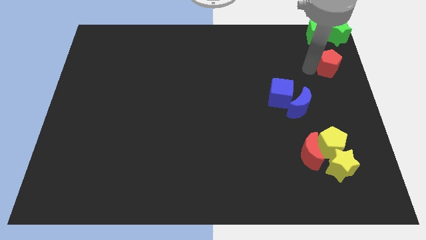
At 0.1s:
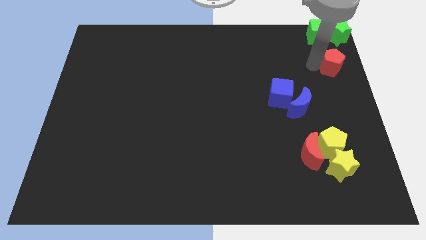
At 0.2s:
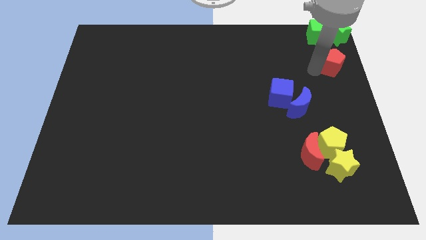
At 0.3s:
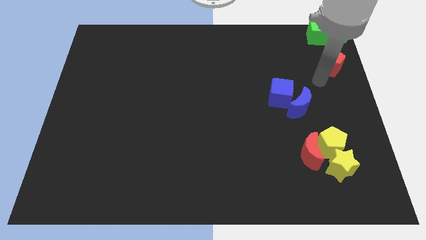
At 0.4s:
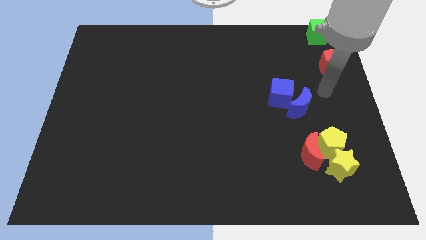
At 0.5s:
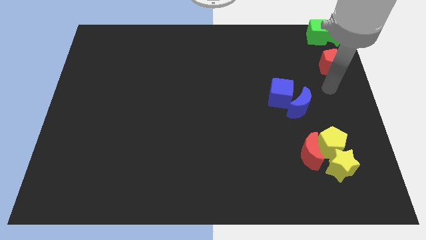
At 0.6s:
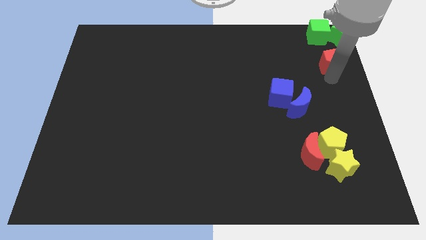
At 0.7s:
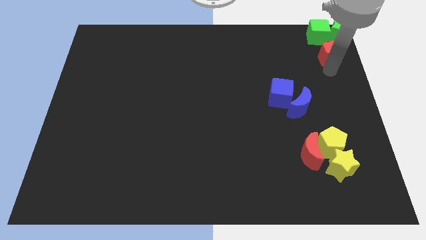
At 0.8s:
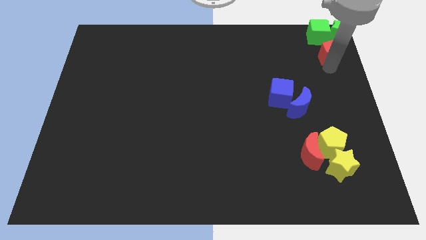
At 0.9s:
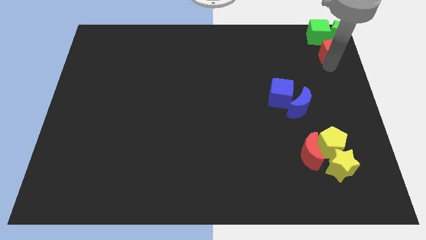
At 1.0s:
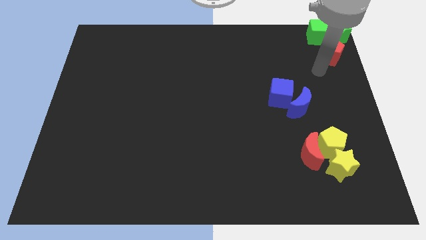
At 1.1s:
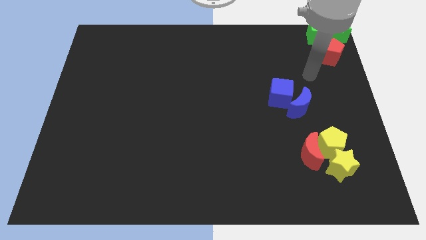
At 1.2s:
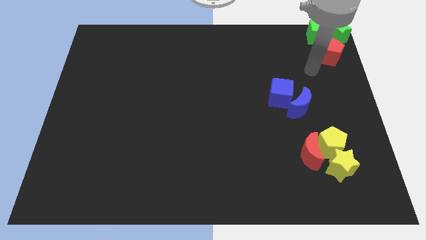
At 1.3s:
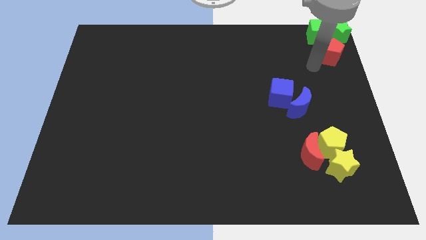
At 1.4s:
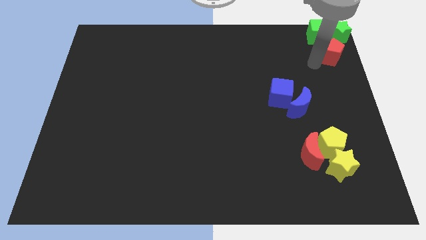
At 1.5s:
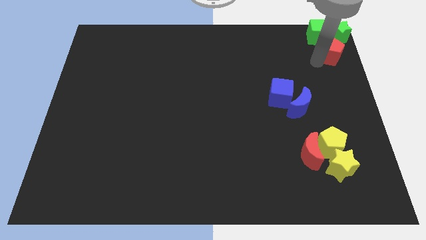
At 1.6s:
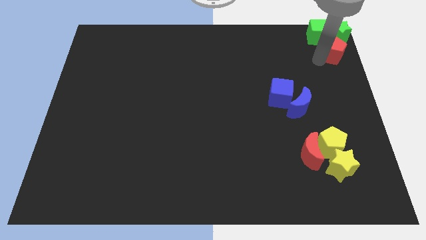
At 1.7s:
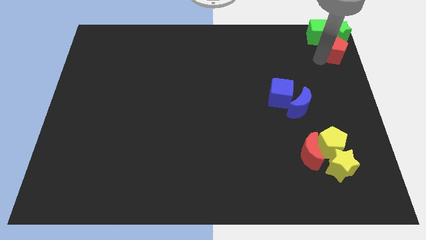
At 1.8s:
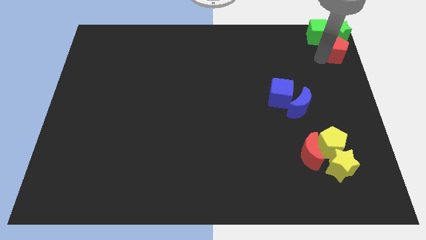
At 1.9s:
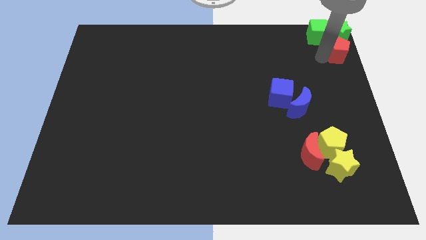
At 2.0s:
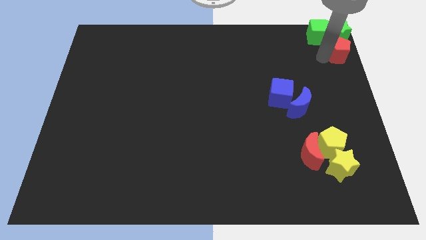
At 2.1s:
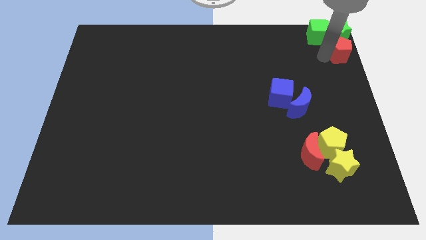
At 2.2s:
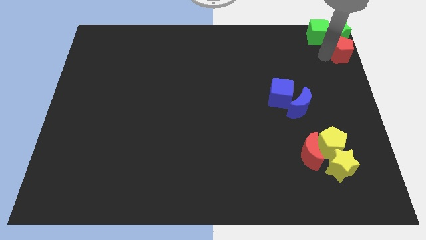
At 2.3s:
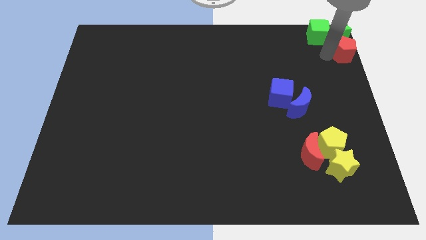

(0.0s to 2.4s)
place the red pentagon below the green star

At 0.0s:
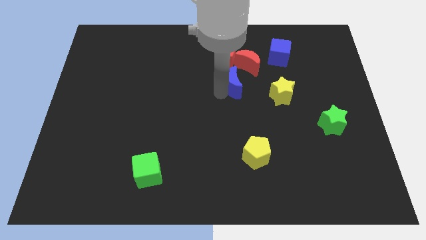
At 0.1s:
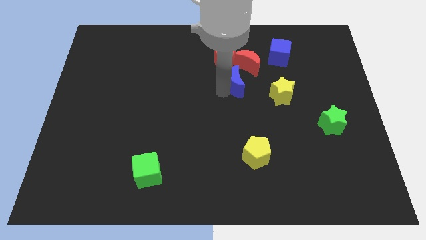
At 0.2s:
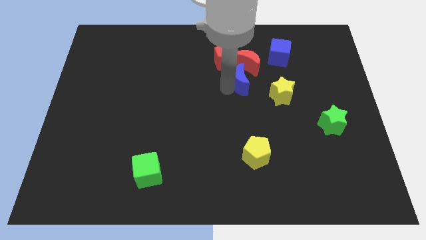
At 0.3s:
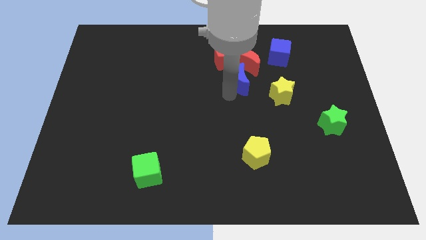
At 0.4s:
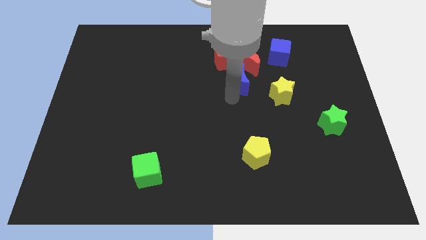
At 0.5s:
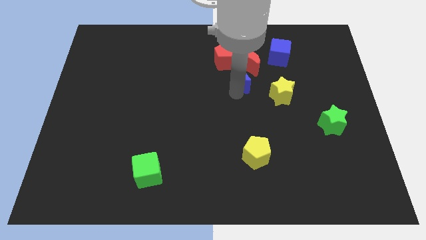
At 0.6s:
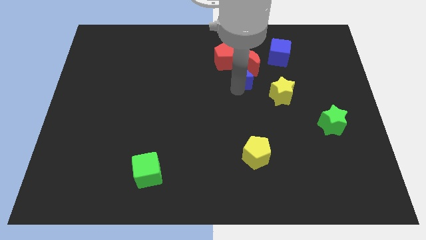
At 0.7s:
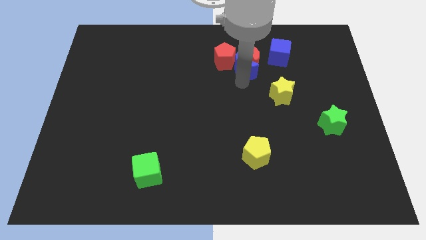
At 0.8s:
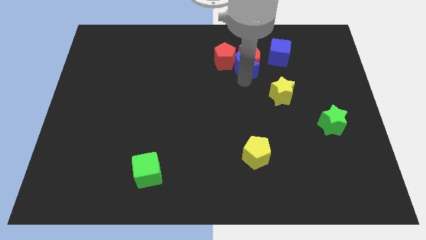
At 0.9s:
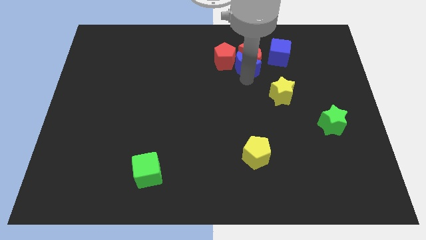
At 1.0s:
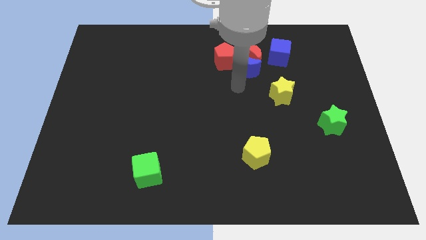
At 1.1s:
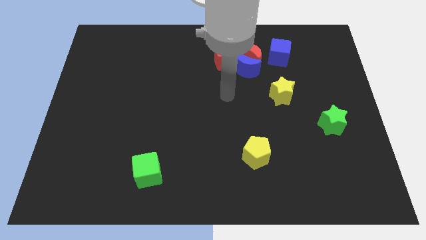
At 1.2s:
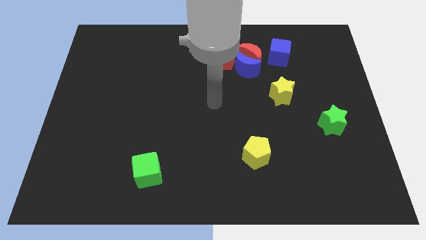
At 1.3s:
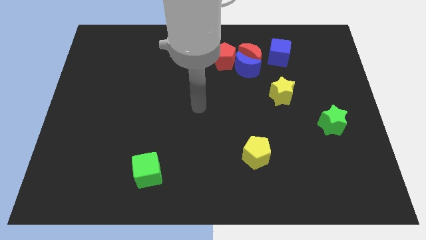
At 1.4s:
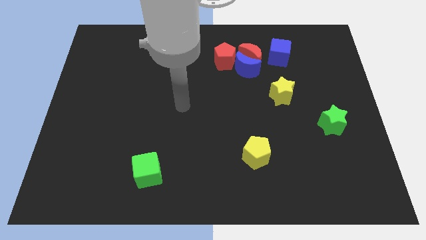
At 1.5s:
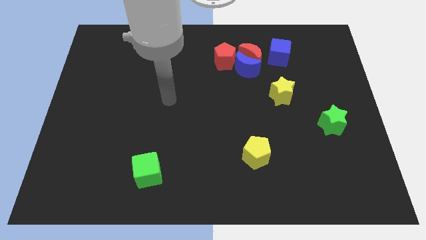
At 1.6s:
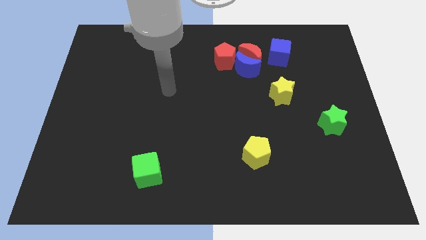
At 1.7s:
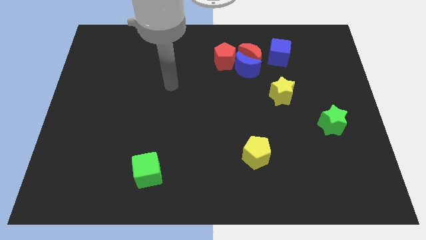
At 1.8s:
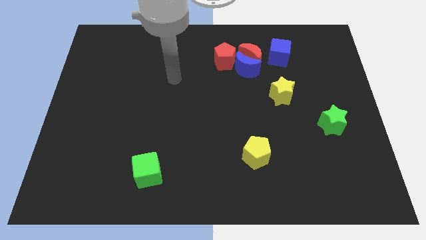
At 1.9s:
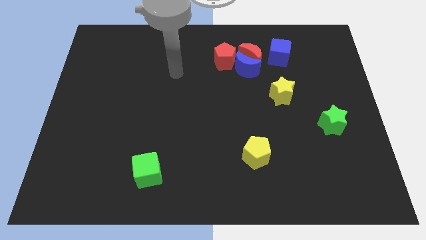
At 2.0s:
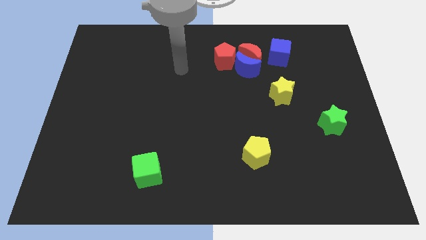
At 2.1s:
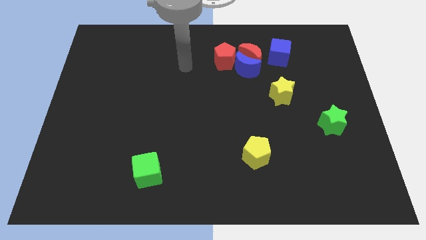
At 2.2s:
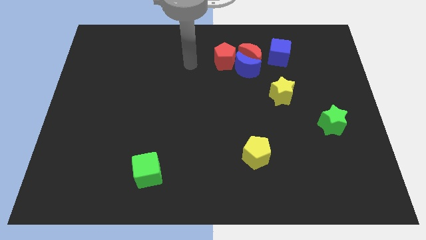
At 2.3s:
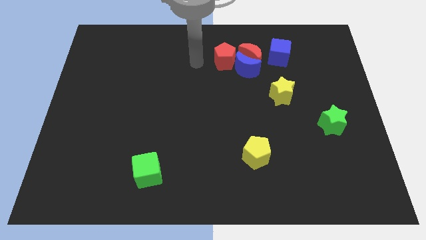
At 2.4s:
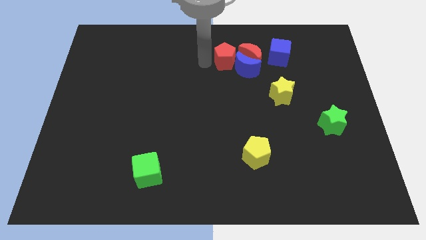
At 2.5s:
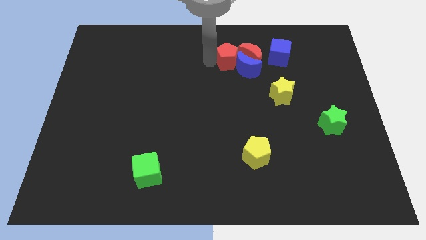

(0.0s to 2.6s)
push the blue moon into the red moon

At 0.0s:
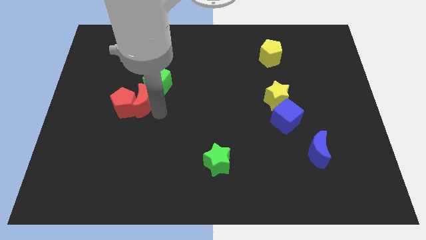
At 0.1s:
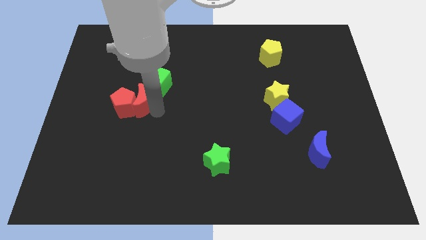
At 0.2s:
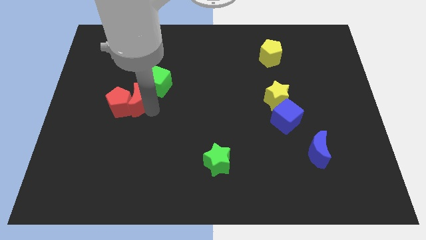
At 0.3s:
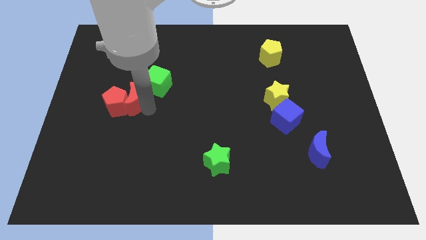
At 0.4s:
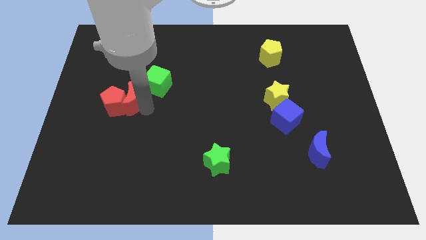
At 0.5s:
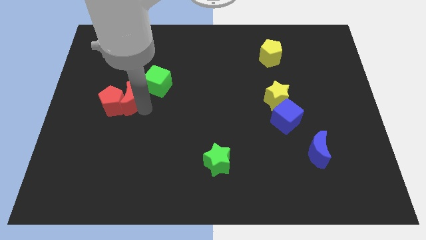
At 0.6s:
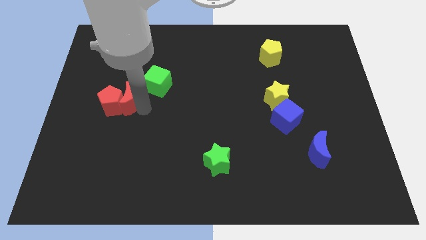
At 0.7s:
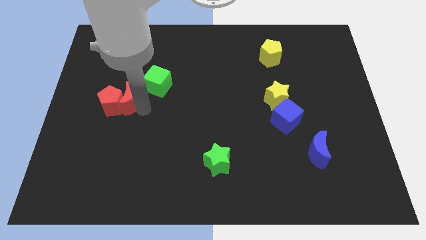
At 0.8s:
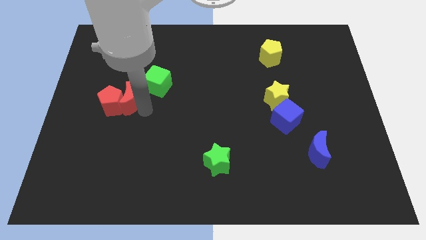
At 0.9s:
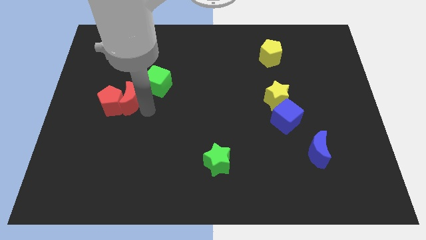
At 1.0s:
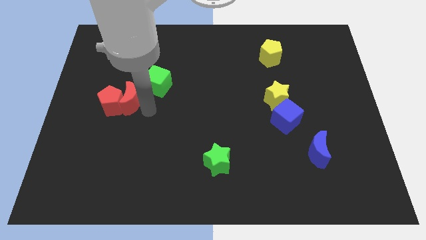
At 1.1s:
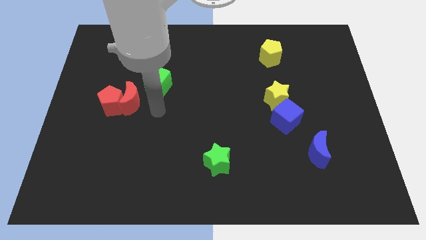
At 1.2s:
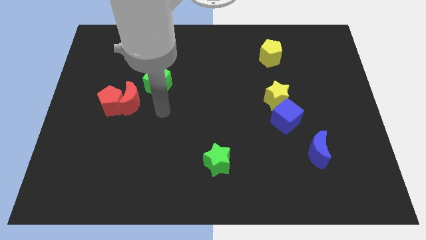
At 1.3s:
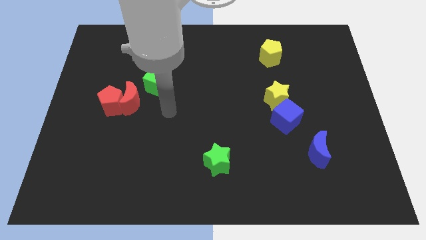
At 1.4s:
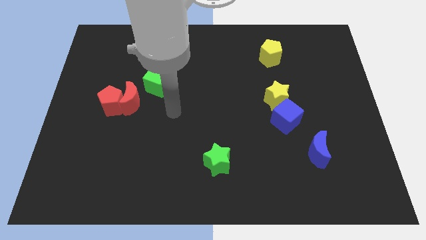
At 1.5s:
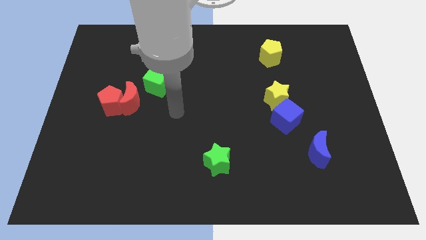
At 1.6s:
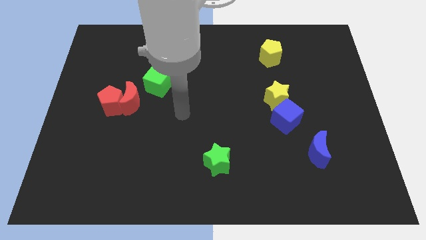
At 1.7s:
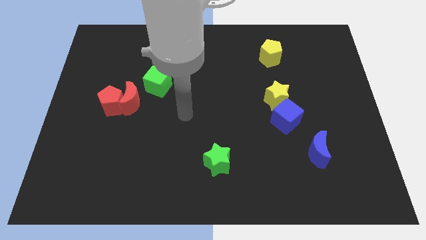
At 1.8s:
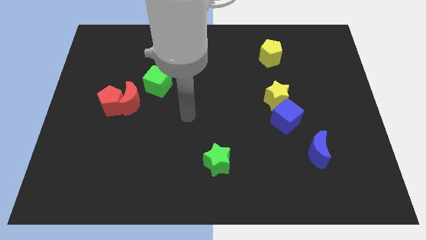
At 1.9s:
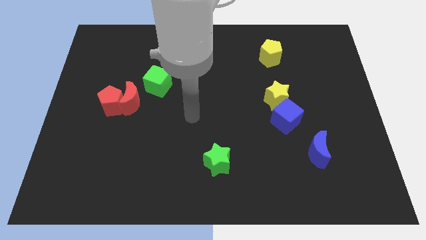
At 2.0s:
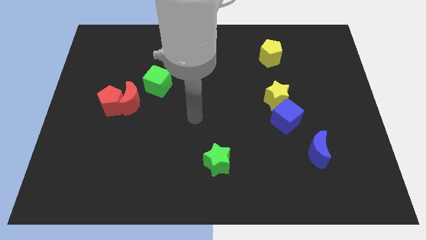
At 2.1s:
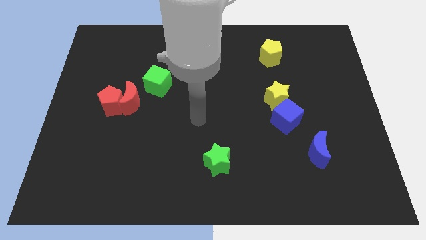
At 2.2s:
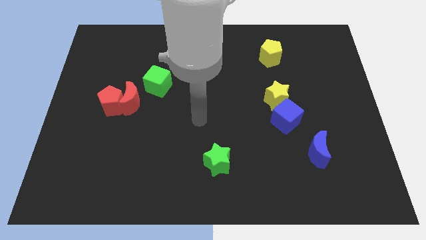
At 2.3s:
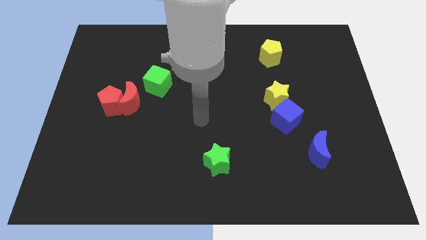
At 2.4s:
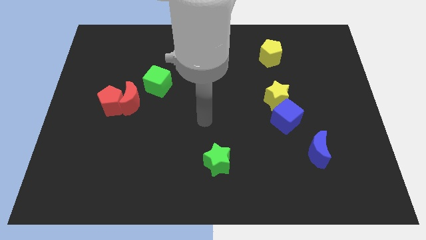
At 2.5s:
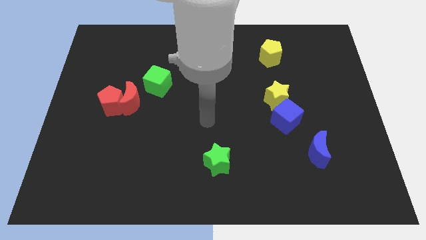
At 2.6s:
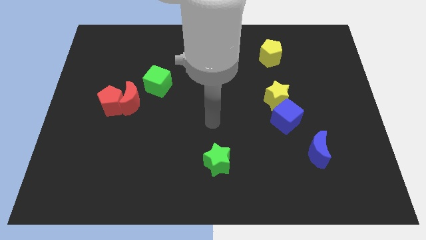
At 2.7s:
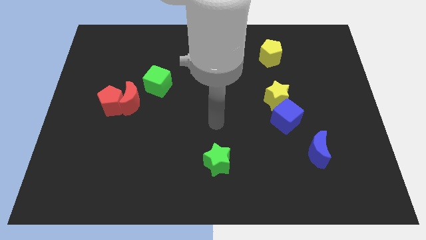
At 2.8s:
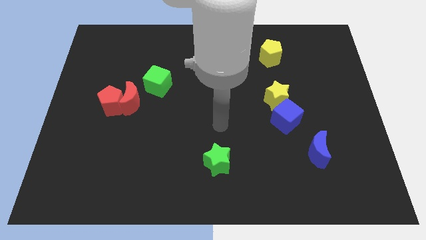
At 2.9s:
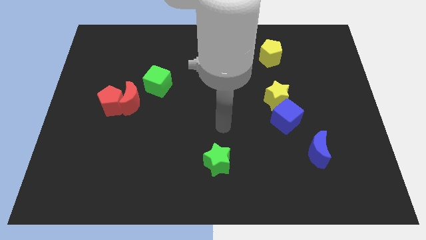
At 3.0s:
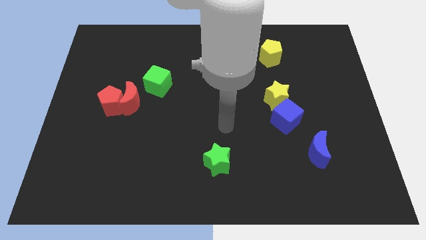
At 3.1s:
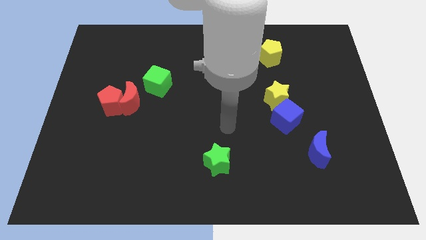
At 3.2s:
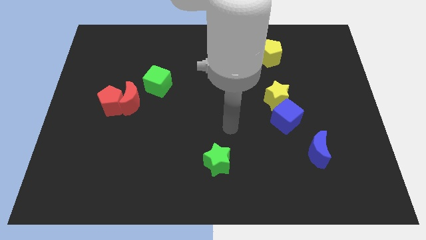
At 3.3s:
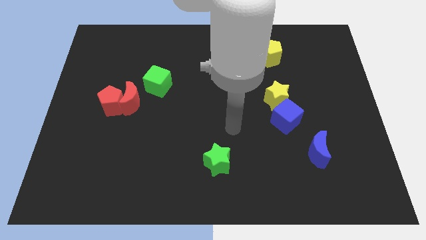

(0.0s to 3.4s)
move your arm away from the red moon

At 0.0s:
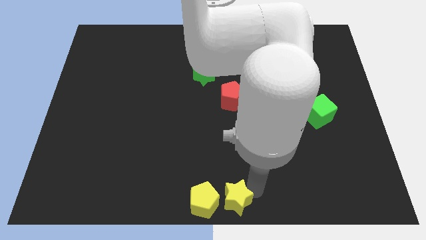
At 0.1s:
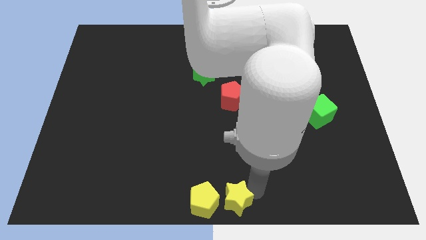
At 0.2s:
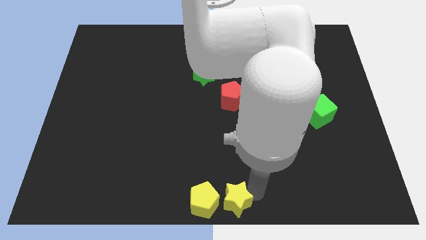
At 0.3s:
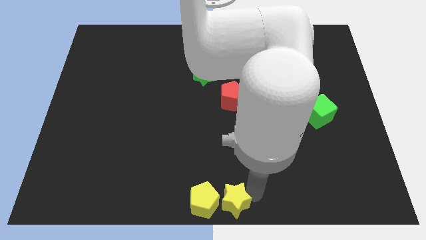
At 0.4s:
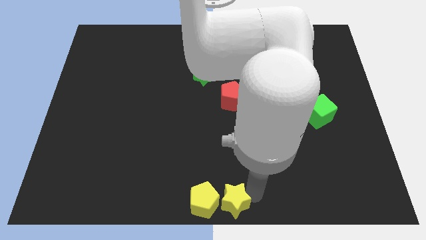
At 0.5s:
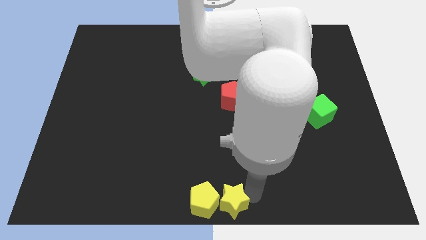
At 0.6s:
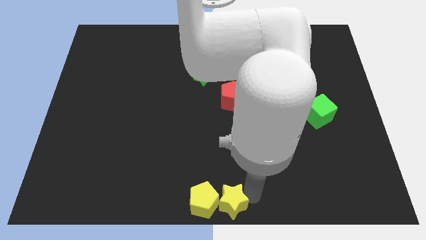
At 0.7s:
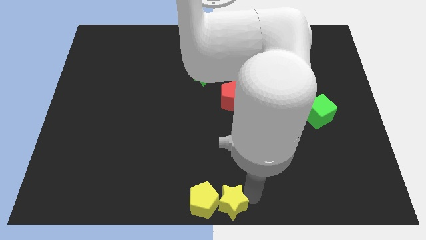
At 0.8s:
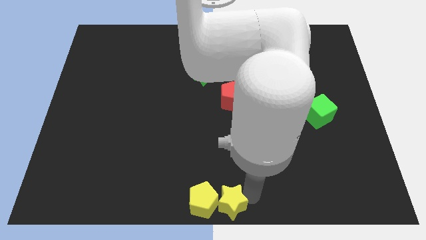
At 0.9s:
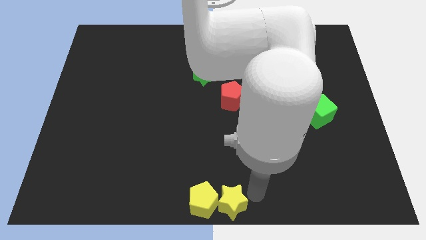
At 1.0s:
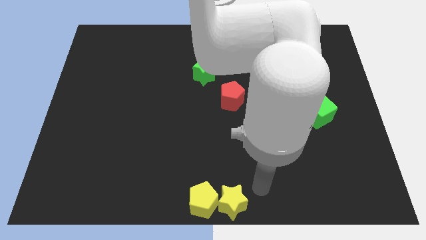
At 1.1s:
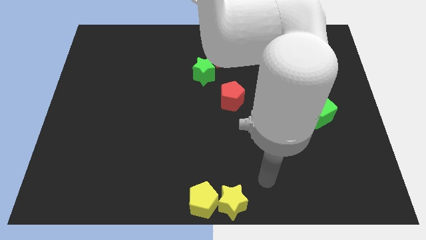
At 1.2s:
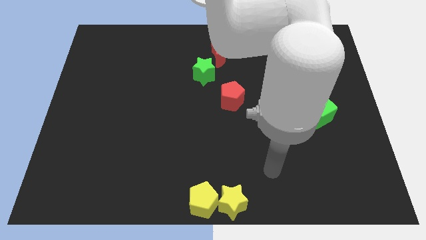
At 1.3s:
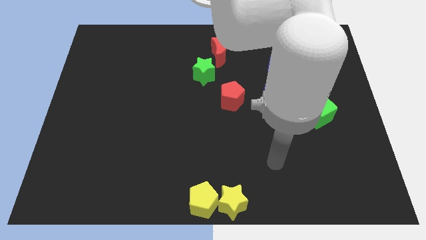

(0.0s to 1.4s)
push the yellow star into yellow pentagon
